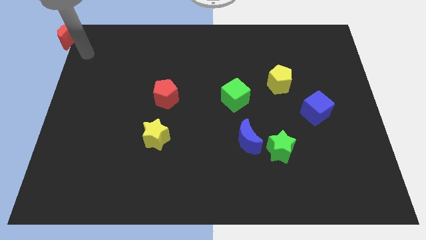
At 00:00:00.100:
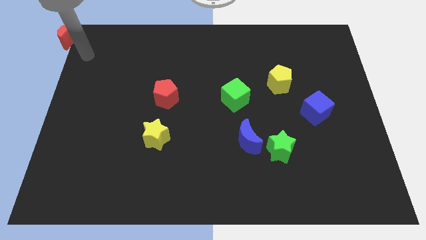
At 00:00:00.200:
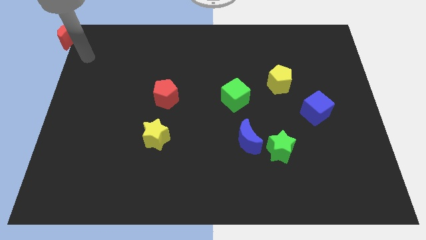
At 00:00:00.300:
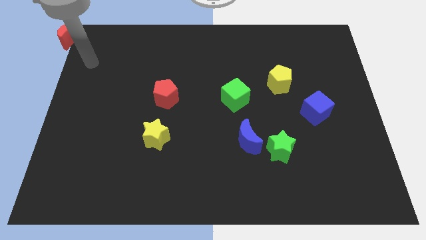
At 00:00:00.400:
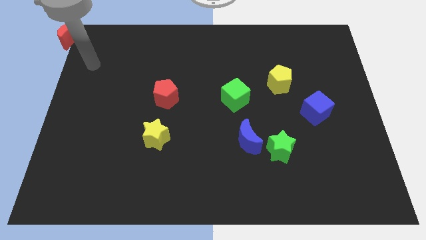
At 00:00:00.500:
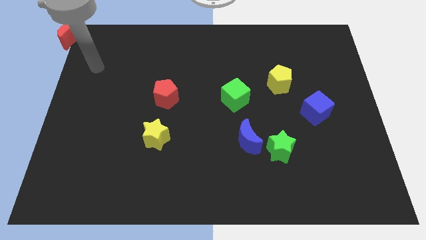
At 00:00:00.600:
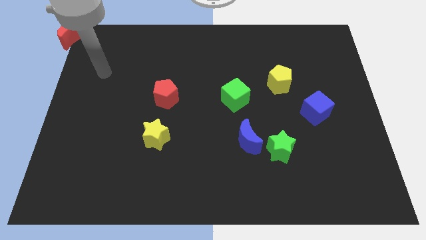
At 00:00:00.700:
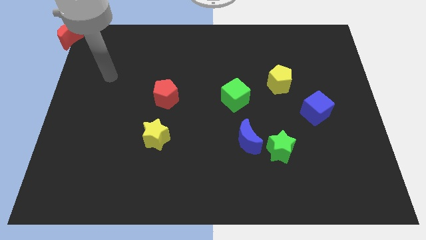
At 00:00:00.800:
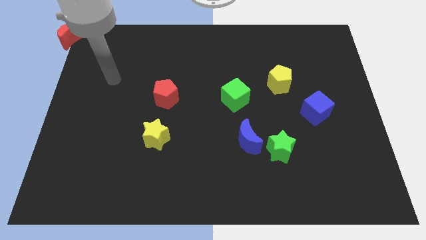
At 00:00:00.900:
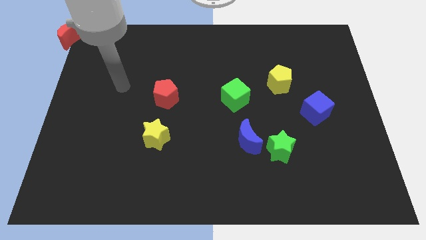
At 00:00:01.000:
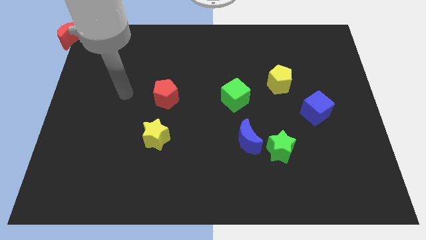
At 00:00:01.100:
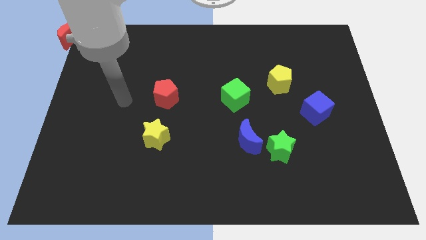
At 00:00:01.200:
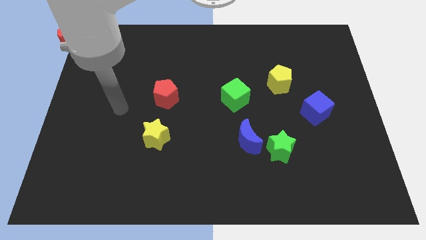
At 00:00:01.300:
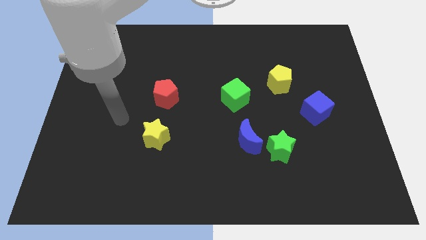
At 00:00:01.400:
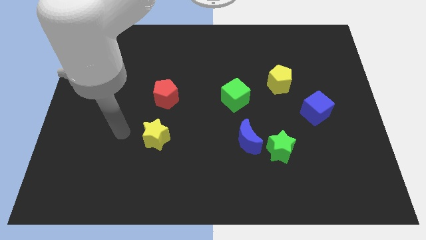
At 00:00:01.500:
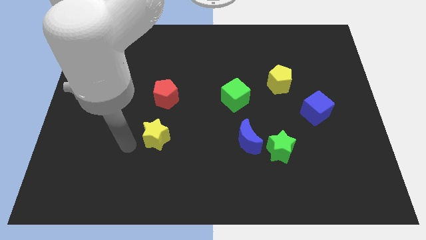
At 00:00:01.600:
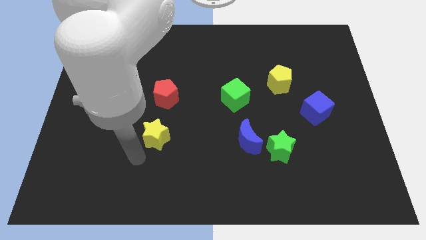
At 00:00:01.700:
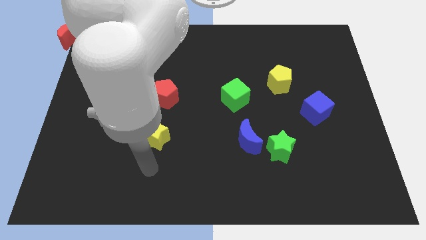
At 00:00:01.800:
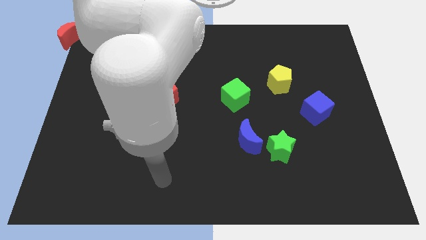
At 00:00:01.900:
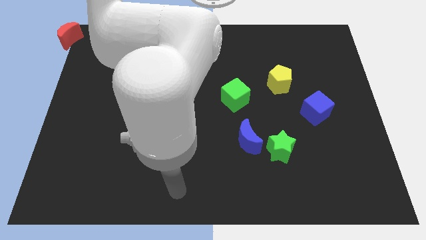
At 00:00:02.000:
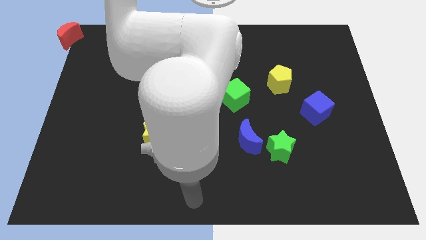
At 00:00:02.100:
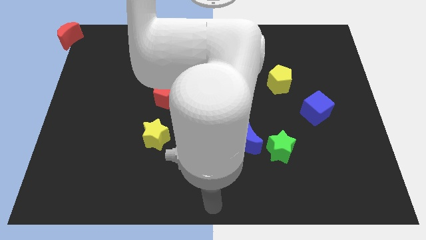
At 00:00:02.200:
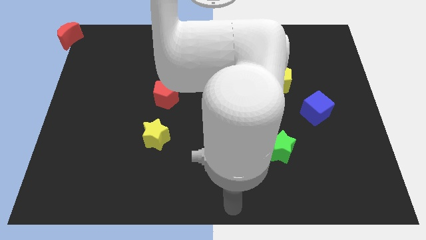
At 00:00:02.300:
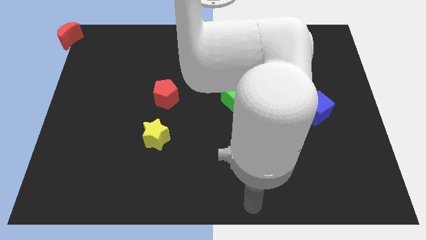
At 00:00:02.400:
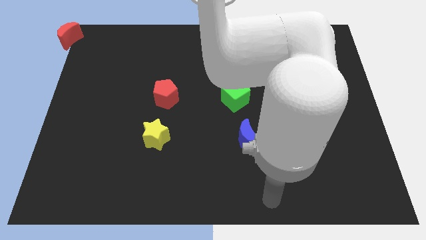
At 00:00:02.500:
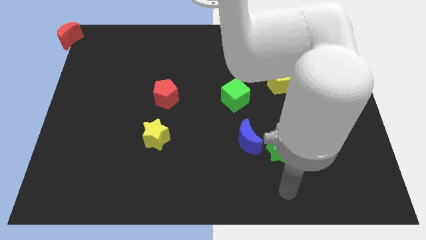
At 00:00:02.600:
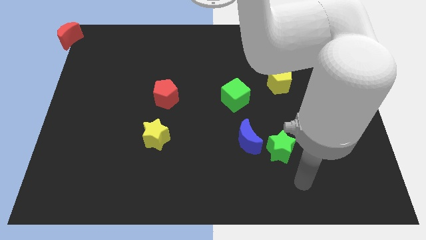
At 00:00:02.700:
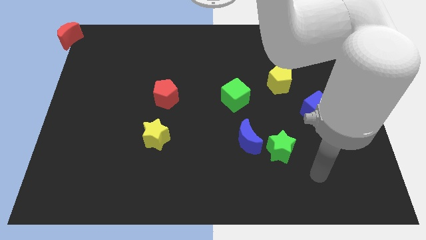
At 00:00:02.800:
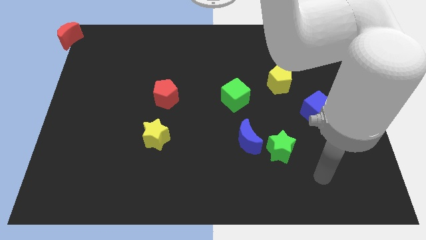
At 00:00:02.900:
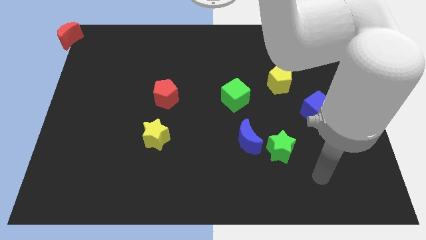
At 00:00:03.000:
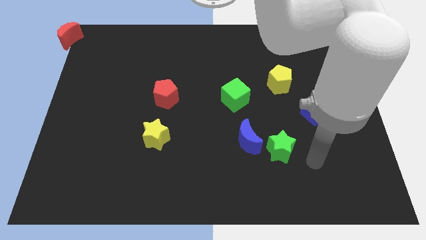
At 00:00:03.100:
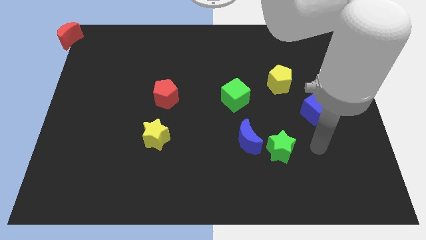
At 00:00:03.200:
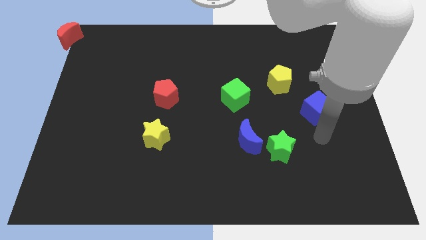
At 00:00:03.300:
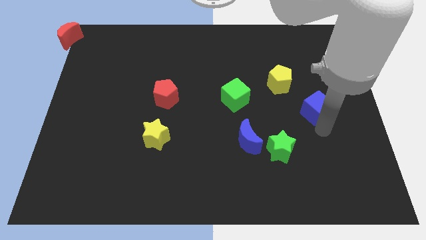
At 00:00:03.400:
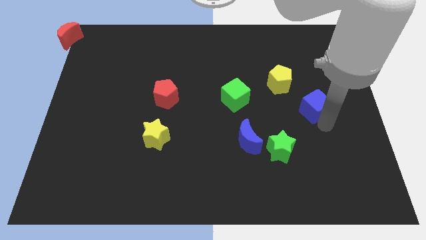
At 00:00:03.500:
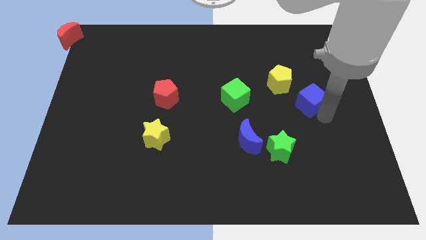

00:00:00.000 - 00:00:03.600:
move your arm away from the red moon

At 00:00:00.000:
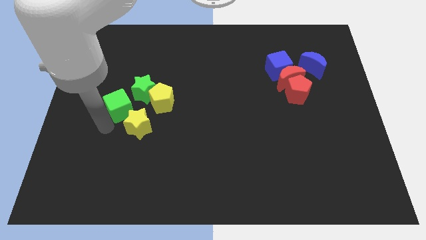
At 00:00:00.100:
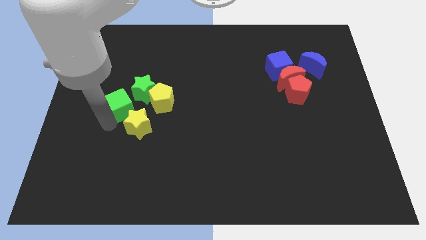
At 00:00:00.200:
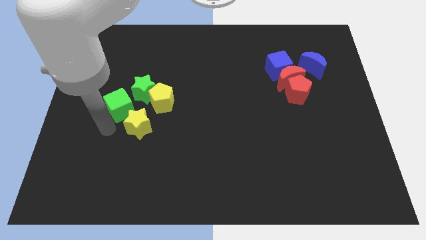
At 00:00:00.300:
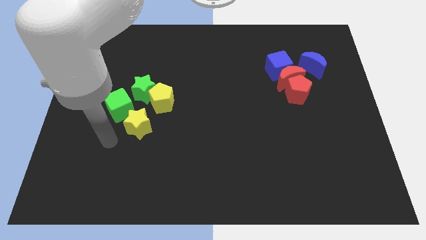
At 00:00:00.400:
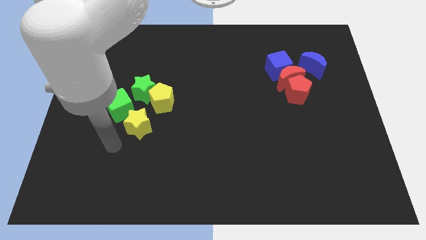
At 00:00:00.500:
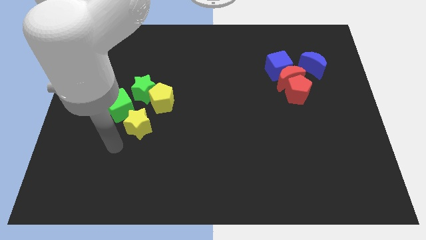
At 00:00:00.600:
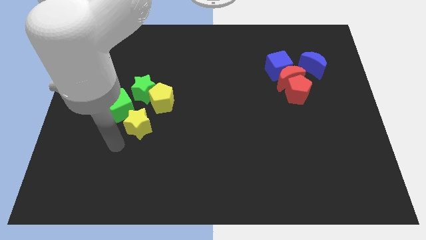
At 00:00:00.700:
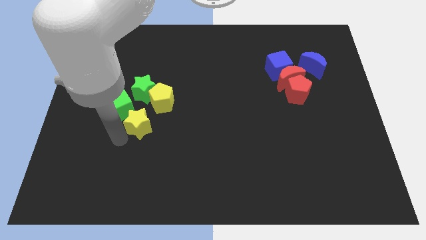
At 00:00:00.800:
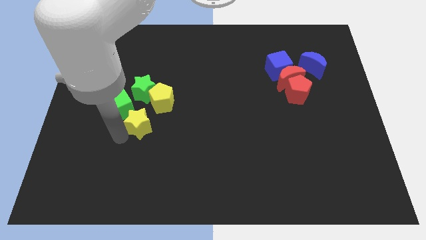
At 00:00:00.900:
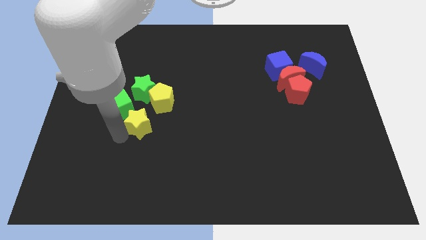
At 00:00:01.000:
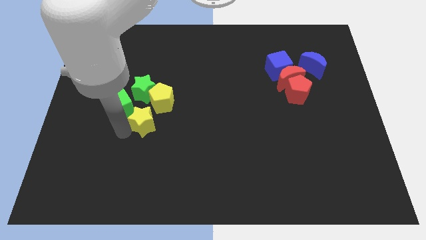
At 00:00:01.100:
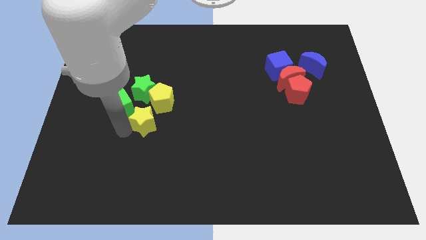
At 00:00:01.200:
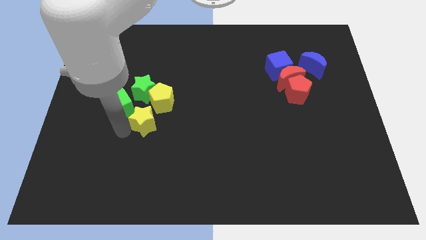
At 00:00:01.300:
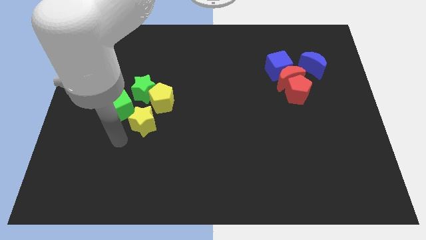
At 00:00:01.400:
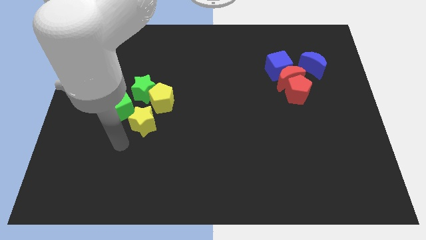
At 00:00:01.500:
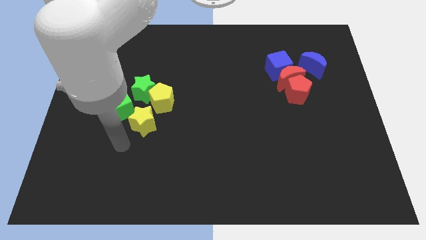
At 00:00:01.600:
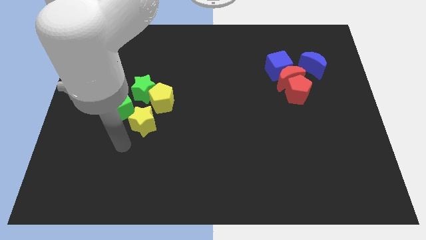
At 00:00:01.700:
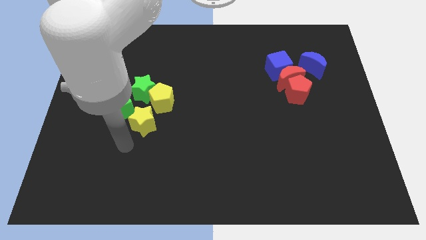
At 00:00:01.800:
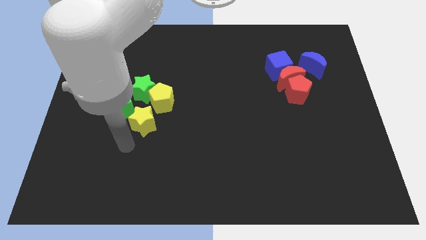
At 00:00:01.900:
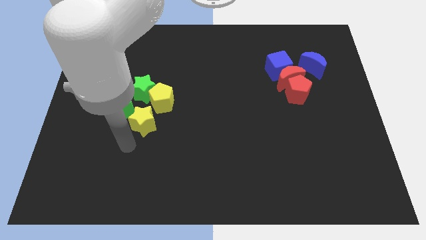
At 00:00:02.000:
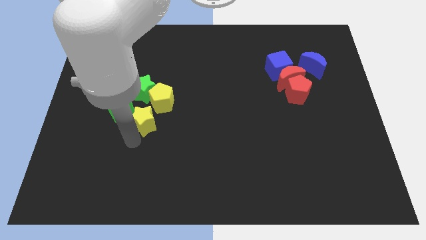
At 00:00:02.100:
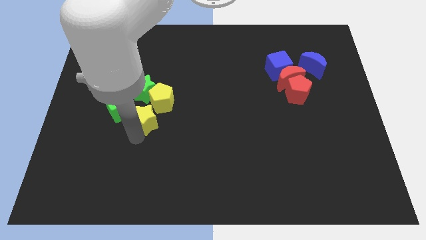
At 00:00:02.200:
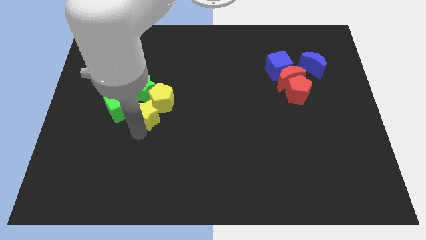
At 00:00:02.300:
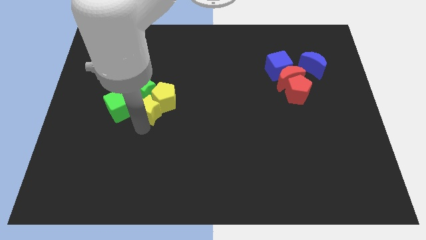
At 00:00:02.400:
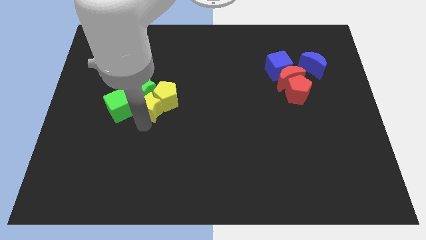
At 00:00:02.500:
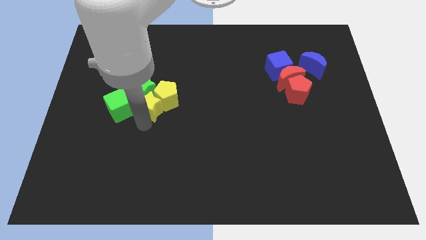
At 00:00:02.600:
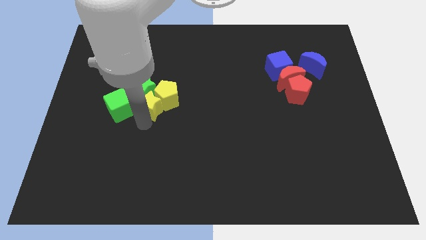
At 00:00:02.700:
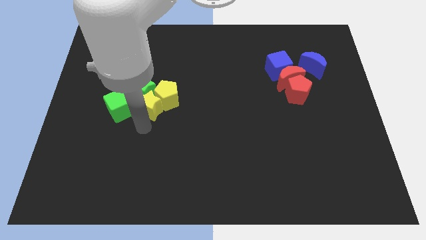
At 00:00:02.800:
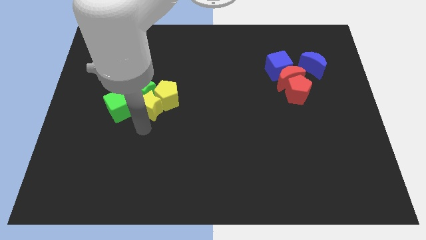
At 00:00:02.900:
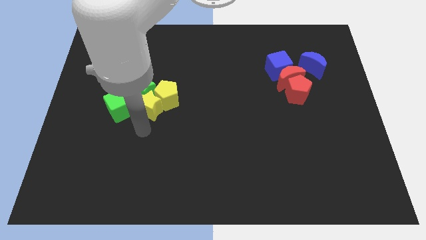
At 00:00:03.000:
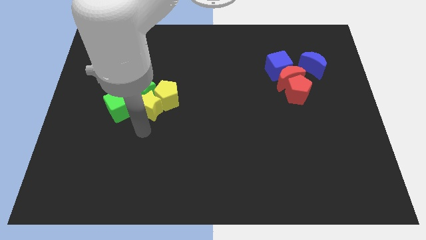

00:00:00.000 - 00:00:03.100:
push the yellow star into the bottom of the yellow pentagon

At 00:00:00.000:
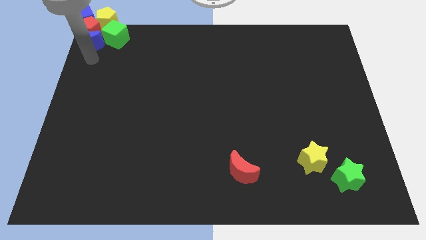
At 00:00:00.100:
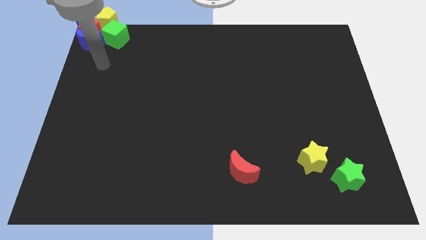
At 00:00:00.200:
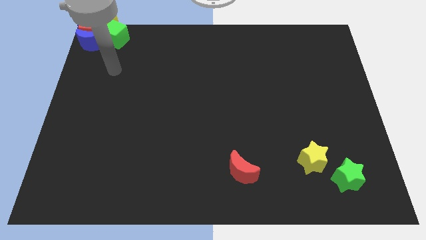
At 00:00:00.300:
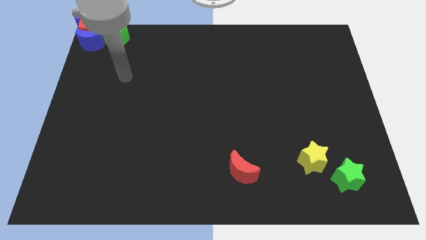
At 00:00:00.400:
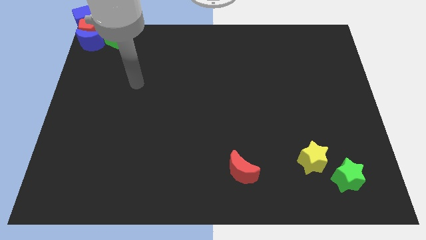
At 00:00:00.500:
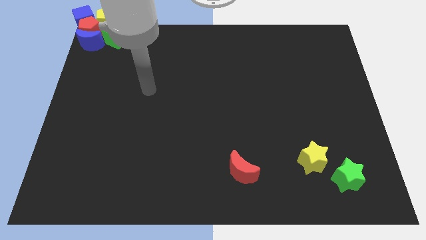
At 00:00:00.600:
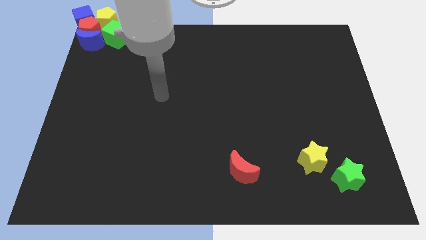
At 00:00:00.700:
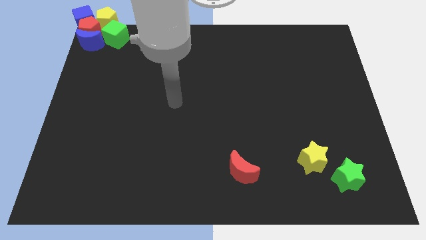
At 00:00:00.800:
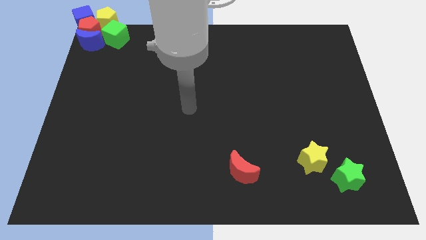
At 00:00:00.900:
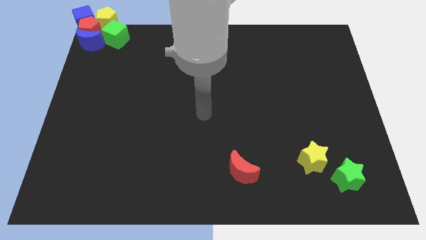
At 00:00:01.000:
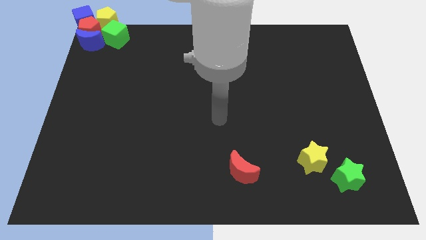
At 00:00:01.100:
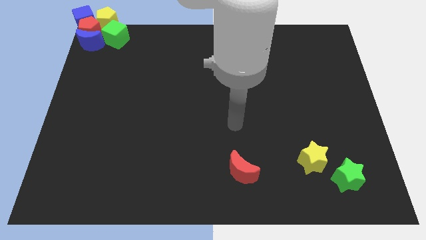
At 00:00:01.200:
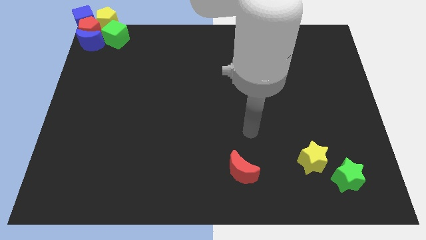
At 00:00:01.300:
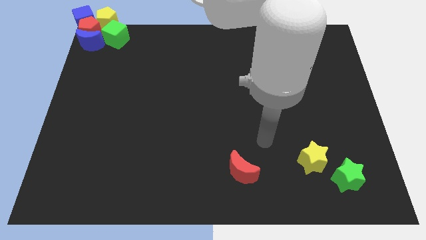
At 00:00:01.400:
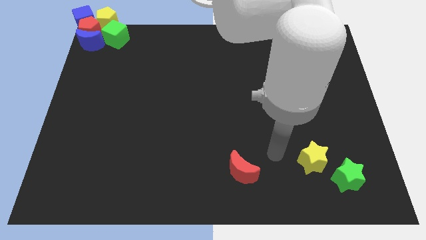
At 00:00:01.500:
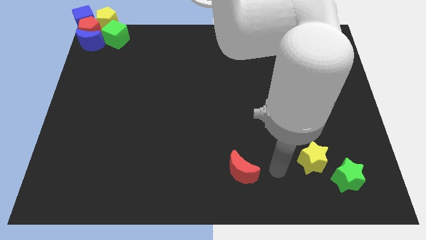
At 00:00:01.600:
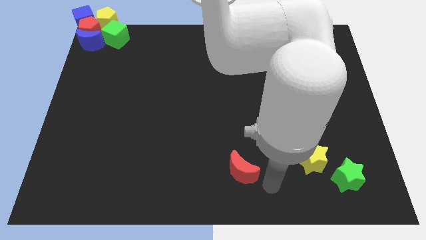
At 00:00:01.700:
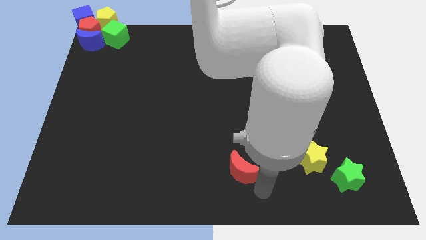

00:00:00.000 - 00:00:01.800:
go to the right side of the red crescent

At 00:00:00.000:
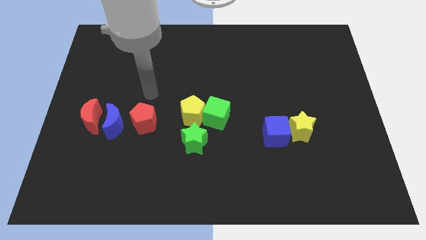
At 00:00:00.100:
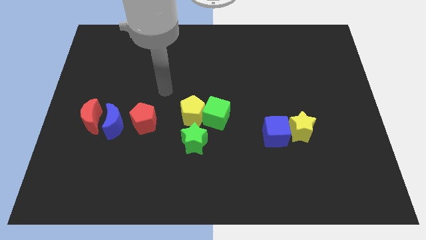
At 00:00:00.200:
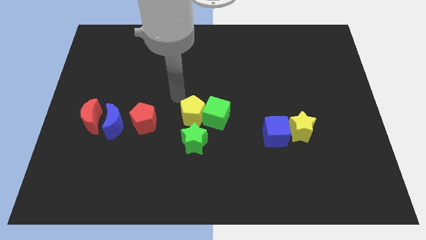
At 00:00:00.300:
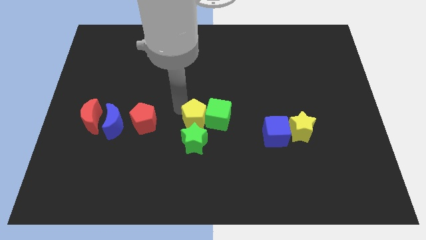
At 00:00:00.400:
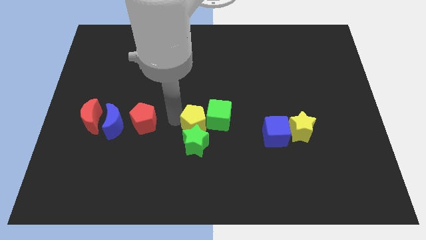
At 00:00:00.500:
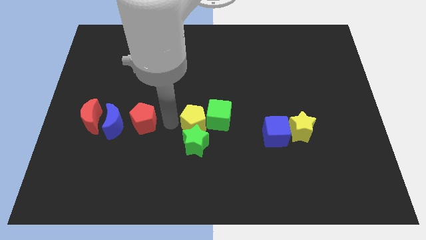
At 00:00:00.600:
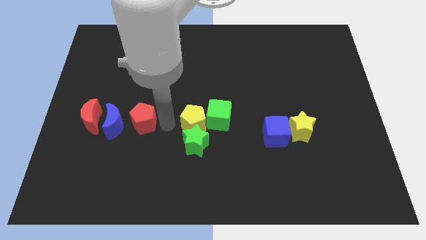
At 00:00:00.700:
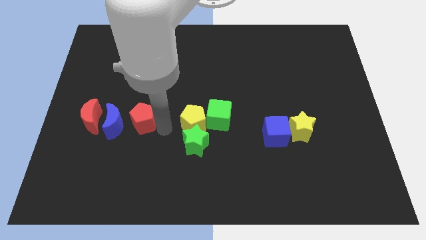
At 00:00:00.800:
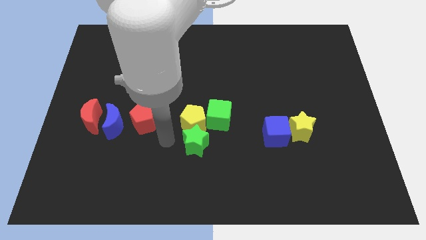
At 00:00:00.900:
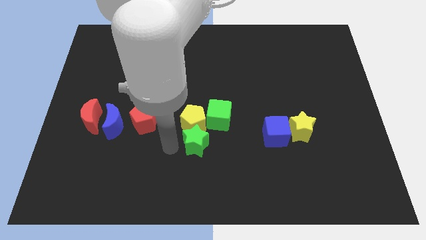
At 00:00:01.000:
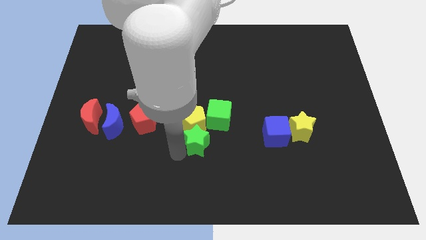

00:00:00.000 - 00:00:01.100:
move the yellow pentagon close to the green star
